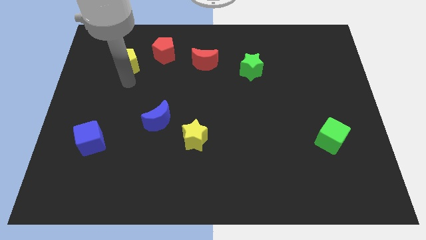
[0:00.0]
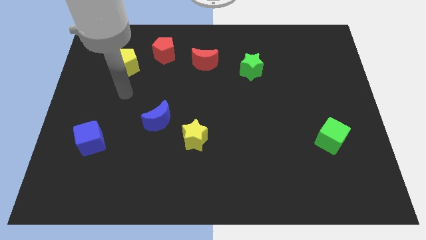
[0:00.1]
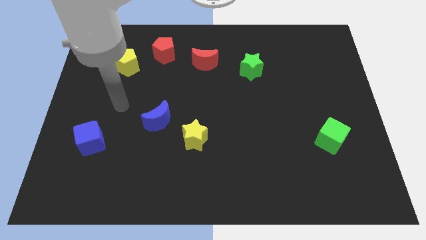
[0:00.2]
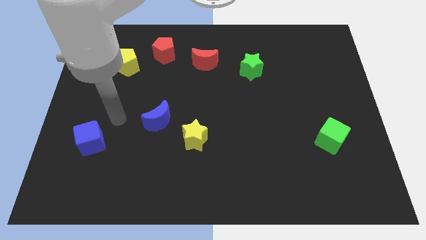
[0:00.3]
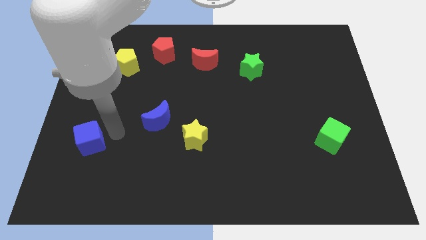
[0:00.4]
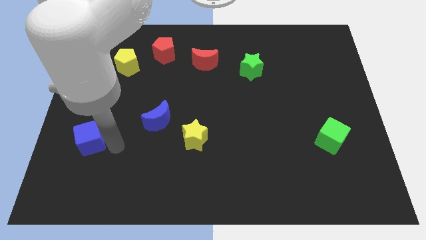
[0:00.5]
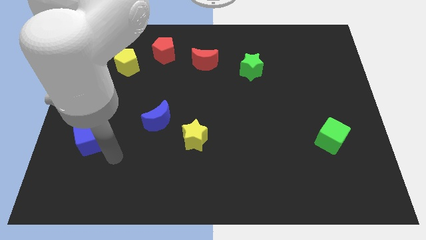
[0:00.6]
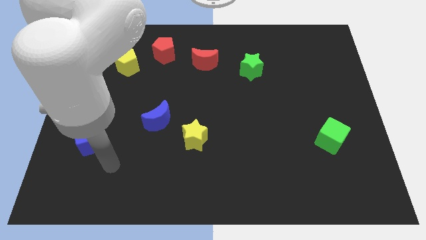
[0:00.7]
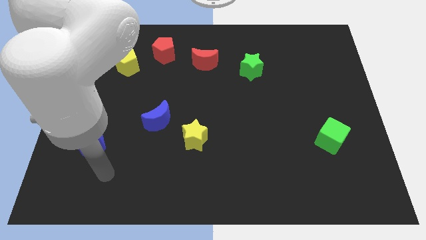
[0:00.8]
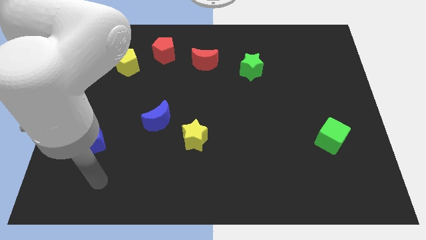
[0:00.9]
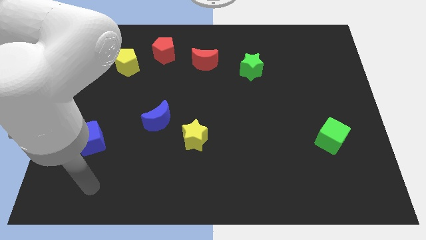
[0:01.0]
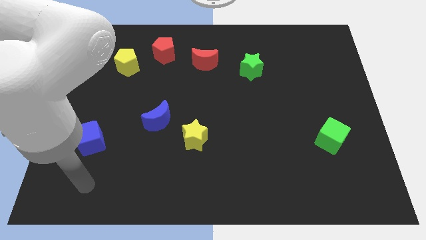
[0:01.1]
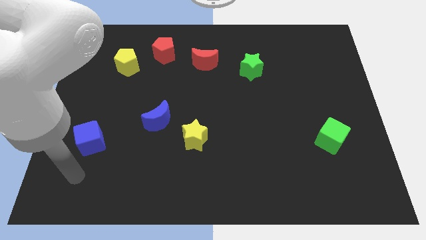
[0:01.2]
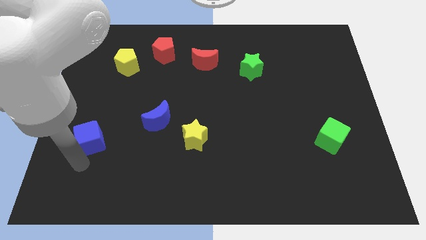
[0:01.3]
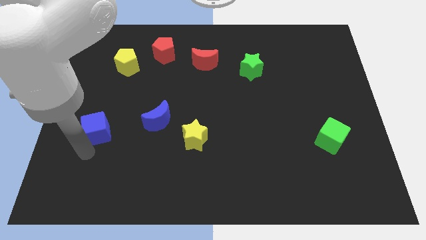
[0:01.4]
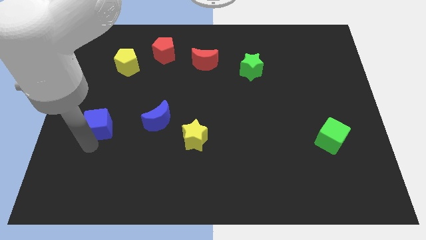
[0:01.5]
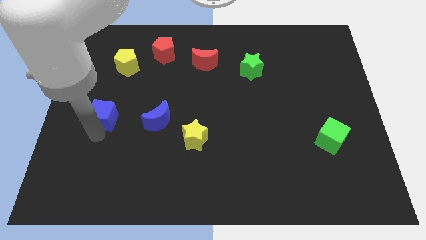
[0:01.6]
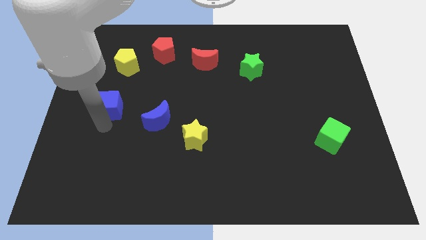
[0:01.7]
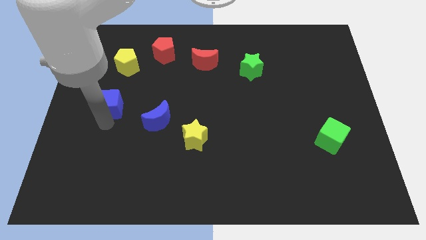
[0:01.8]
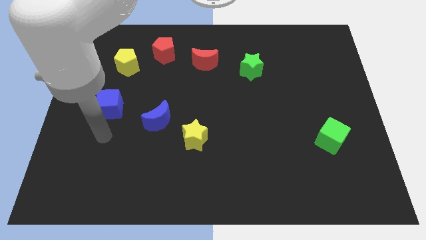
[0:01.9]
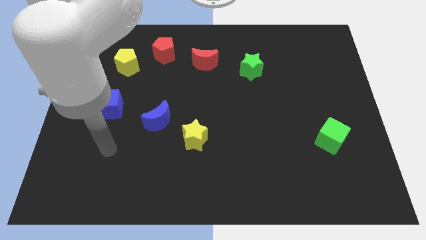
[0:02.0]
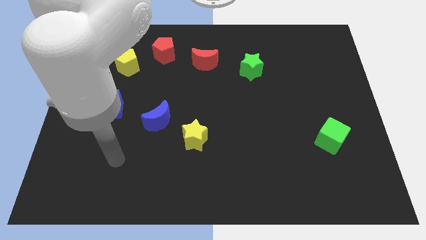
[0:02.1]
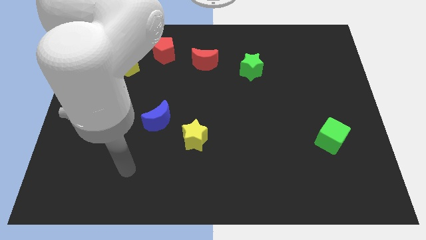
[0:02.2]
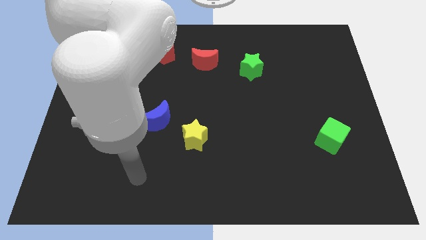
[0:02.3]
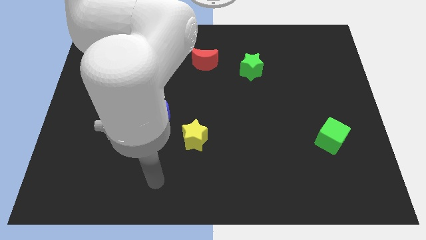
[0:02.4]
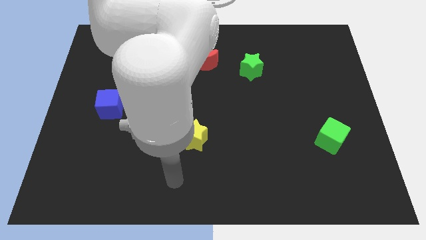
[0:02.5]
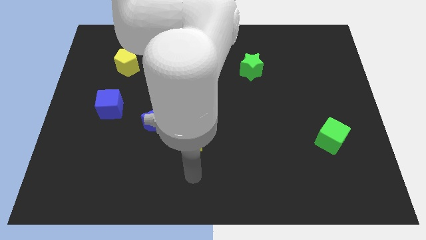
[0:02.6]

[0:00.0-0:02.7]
move the blue cube to the top of the board

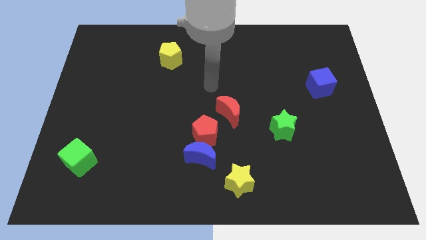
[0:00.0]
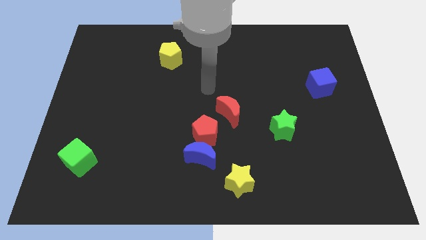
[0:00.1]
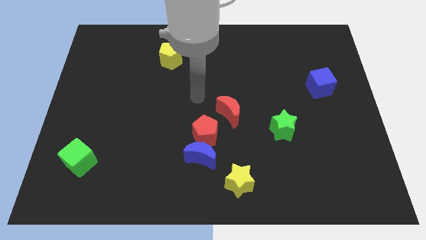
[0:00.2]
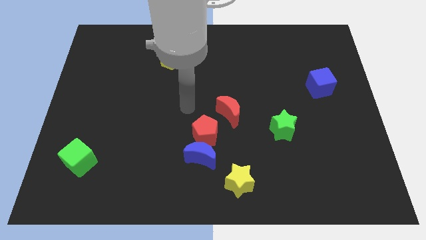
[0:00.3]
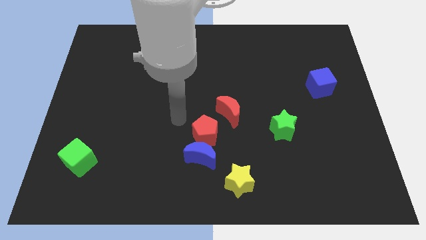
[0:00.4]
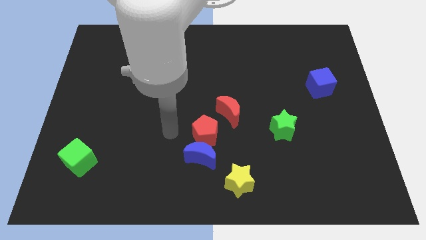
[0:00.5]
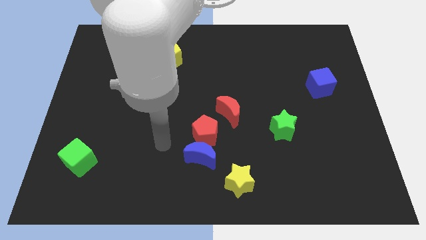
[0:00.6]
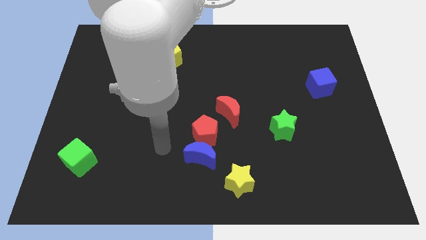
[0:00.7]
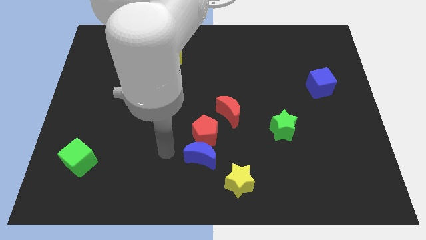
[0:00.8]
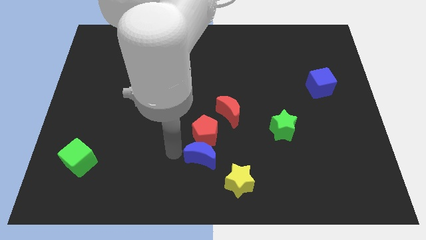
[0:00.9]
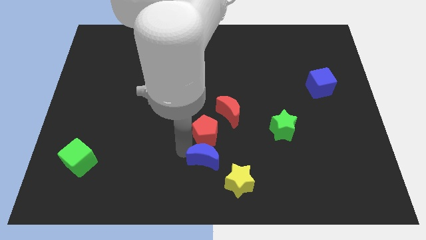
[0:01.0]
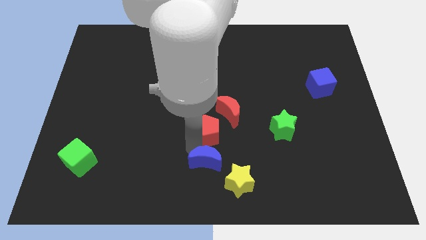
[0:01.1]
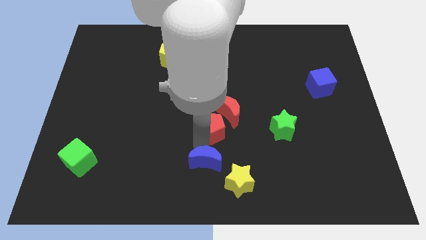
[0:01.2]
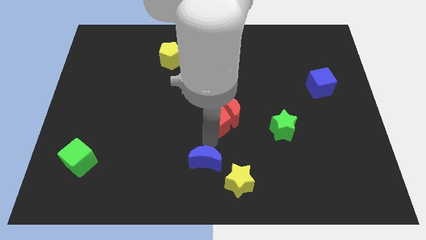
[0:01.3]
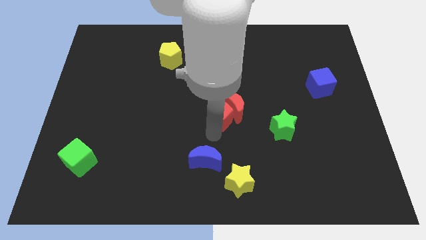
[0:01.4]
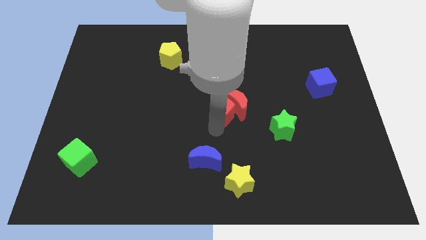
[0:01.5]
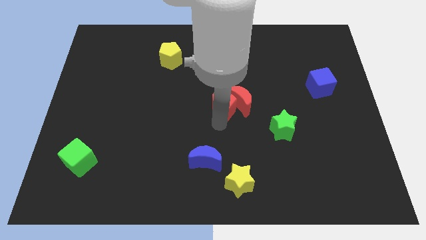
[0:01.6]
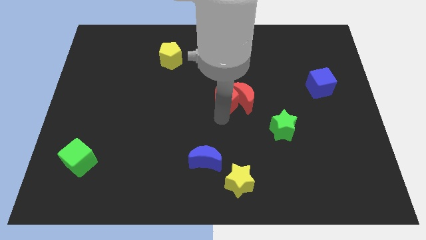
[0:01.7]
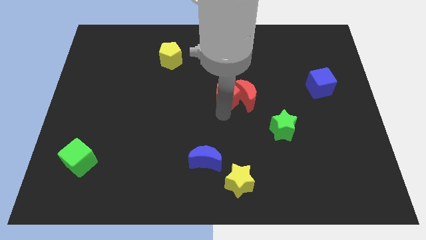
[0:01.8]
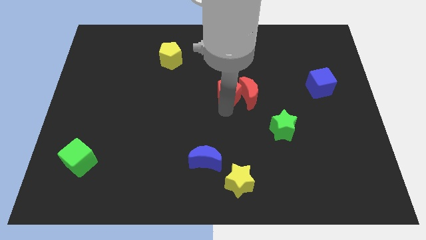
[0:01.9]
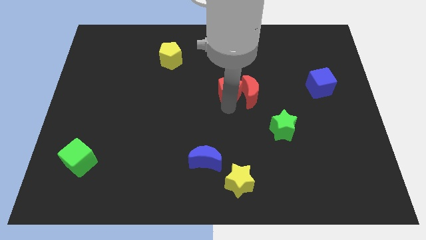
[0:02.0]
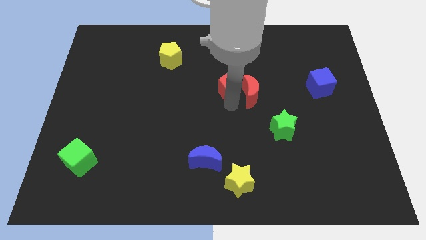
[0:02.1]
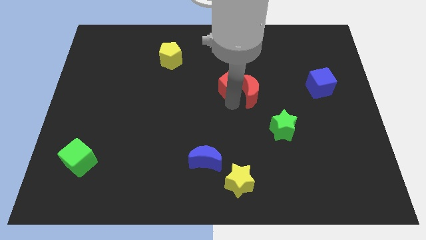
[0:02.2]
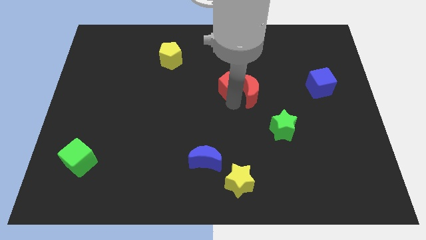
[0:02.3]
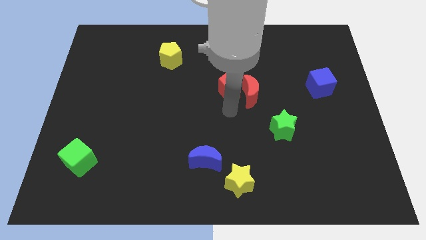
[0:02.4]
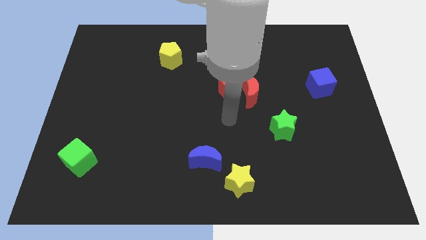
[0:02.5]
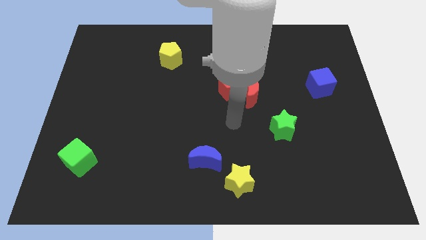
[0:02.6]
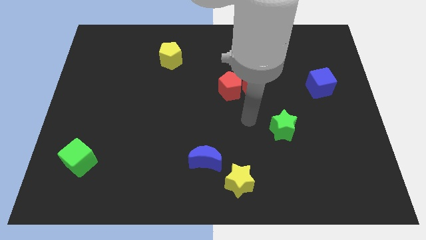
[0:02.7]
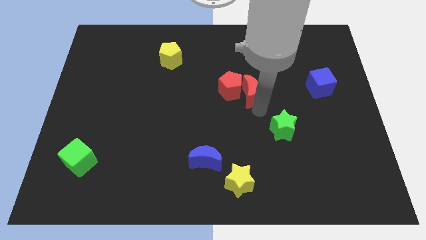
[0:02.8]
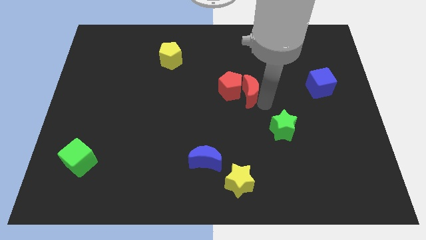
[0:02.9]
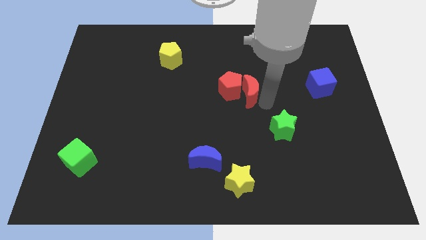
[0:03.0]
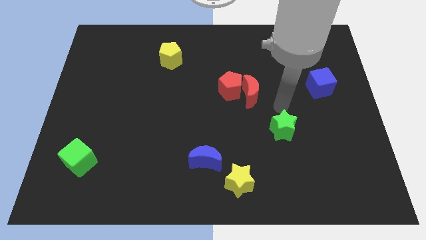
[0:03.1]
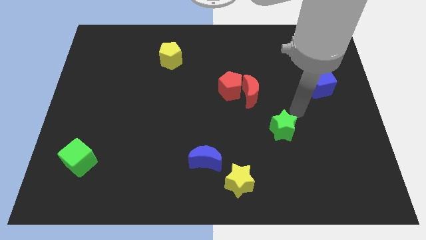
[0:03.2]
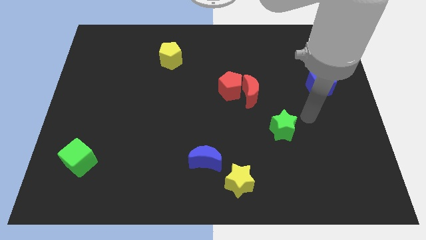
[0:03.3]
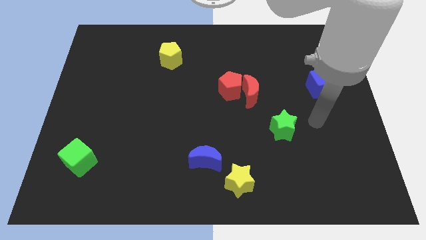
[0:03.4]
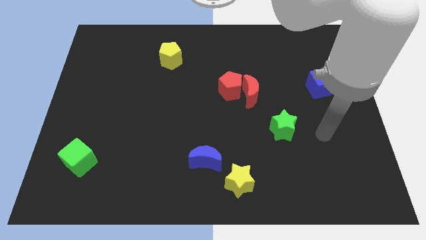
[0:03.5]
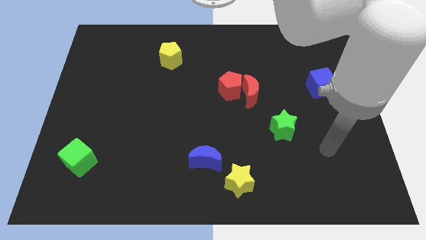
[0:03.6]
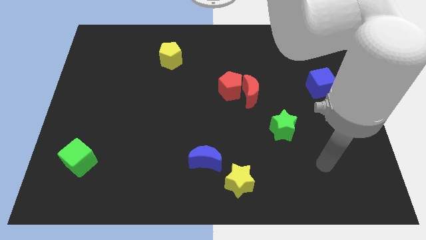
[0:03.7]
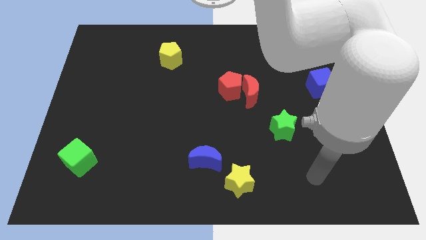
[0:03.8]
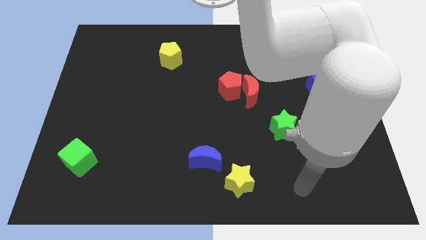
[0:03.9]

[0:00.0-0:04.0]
move the red blocks to the top of the board

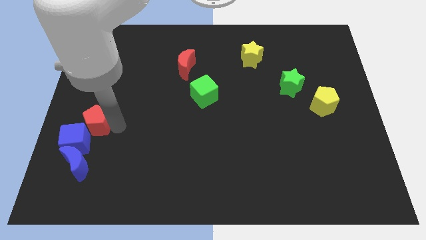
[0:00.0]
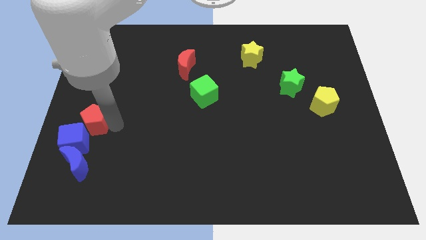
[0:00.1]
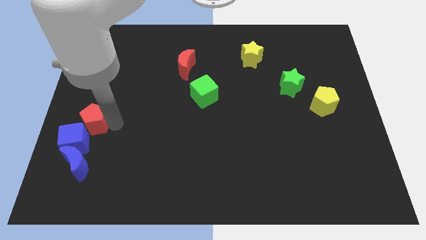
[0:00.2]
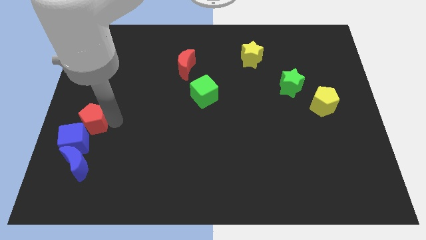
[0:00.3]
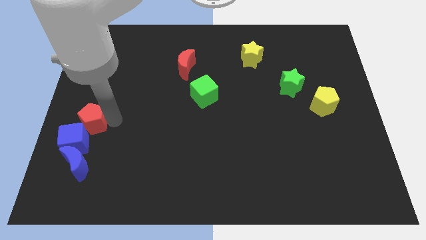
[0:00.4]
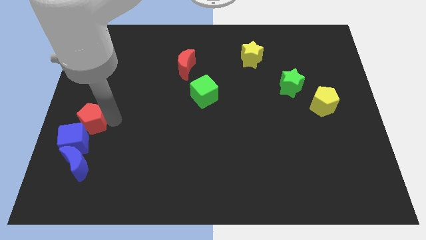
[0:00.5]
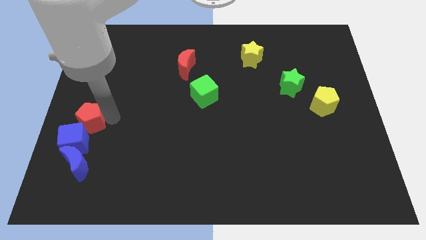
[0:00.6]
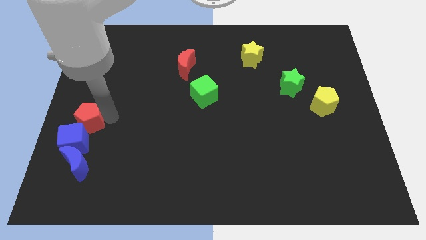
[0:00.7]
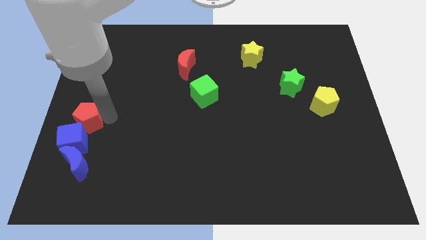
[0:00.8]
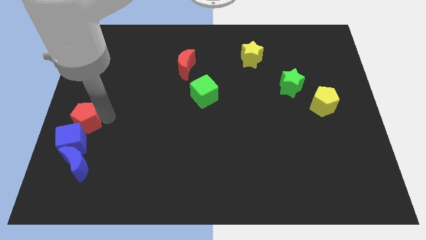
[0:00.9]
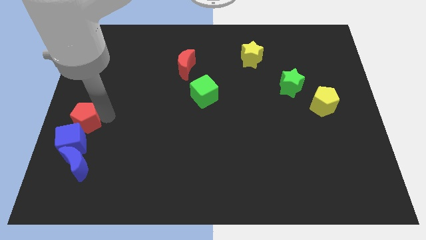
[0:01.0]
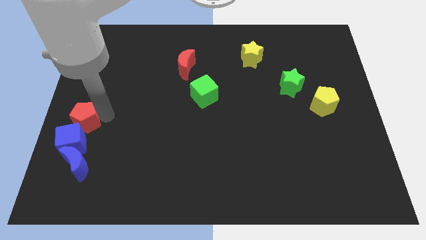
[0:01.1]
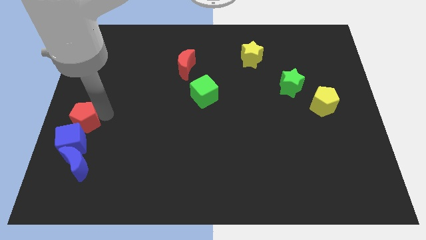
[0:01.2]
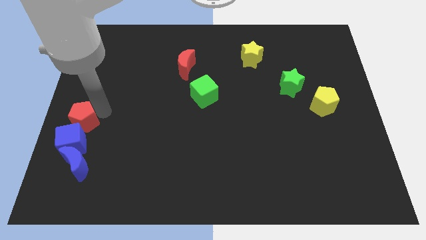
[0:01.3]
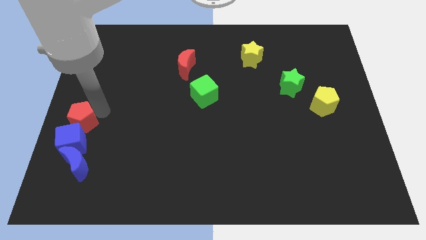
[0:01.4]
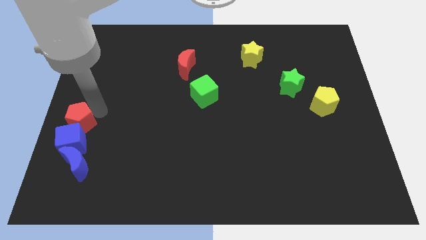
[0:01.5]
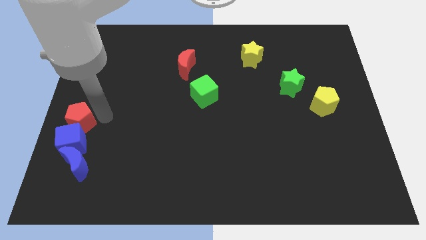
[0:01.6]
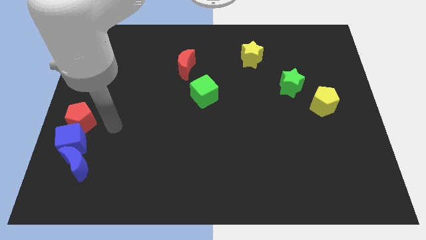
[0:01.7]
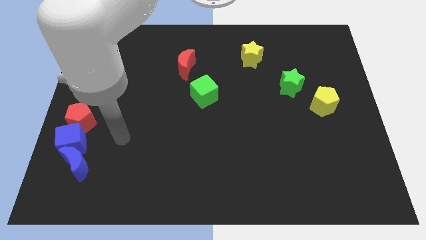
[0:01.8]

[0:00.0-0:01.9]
push the red pentagon above the blue cube

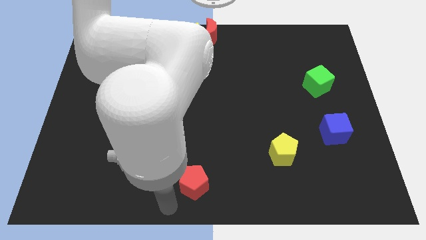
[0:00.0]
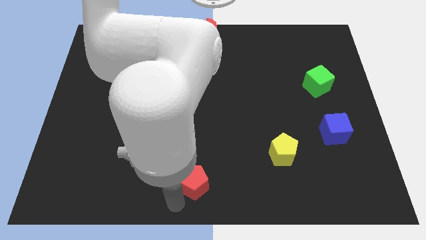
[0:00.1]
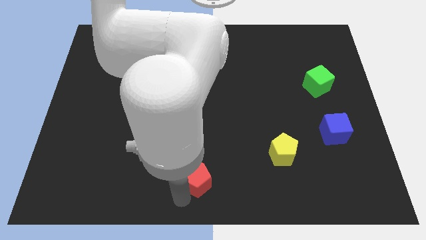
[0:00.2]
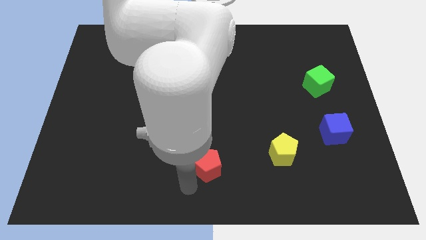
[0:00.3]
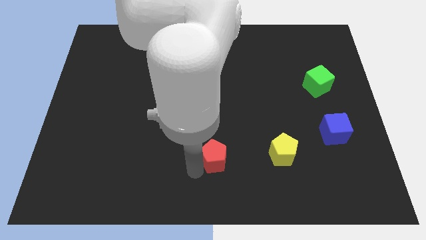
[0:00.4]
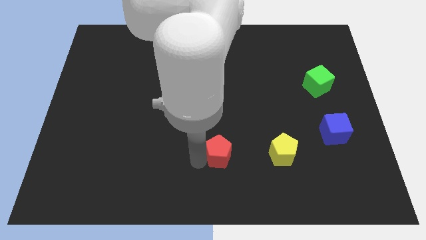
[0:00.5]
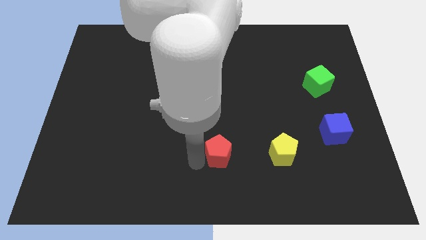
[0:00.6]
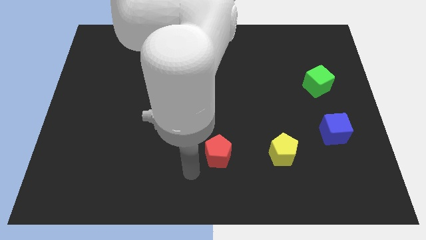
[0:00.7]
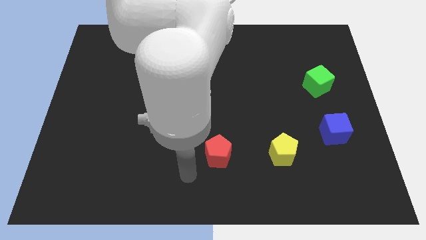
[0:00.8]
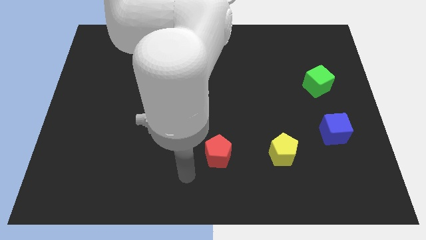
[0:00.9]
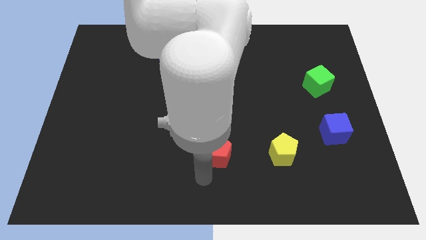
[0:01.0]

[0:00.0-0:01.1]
move the red pentagon parallel to the yellow pentagon
